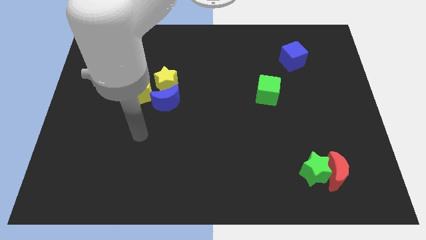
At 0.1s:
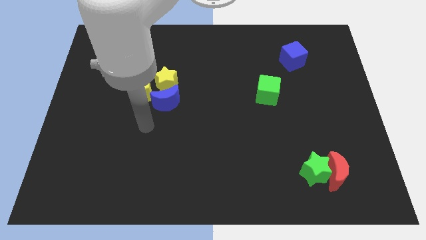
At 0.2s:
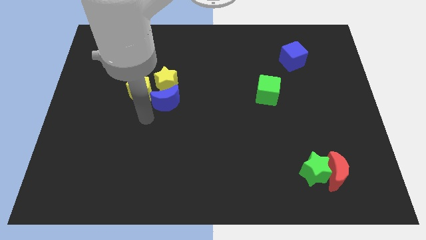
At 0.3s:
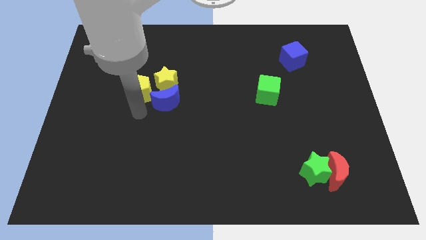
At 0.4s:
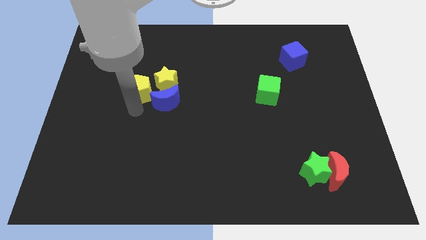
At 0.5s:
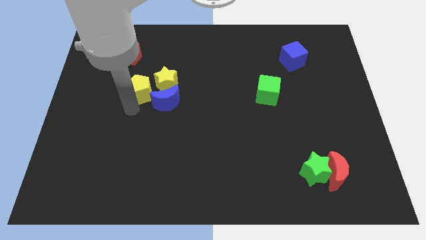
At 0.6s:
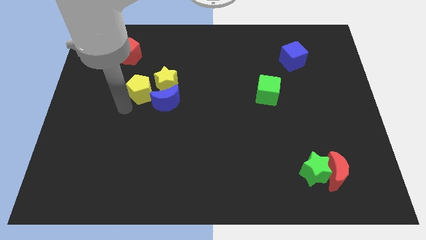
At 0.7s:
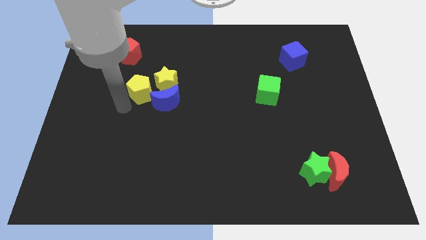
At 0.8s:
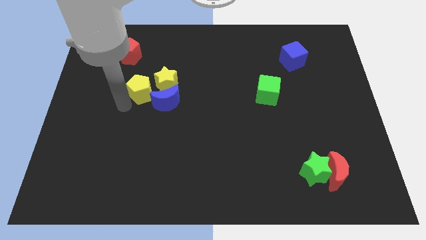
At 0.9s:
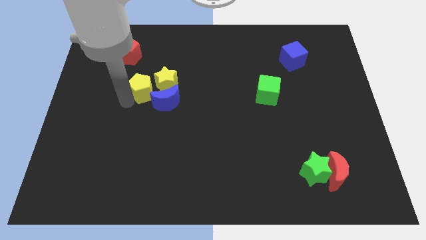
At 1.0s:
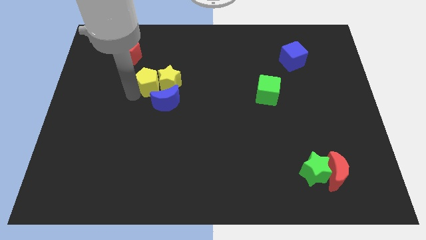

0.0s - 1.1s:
touch the bottom of yellow pentagon

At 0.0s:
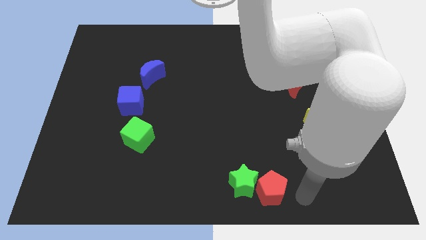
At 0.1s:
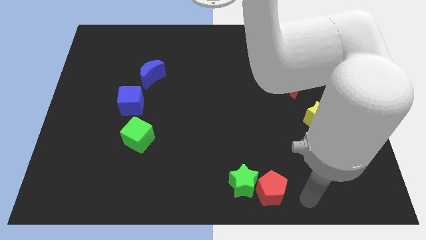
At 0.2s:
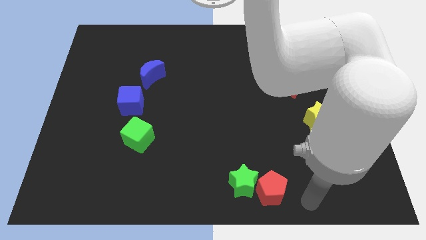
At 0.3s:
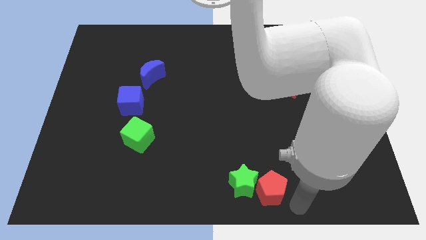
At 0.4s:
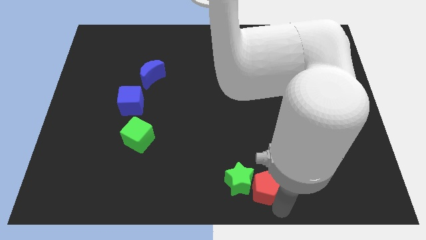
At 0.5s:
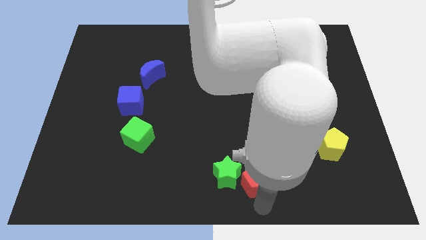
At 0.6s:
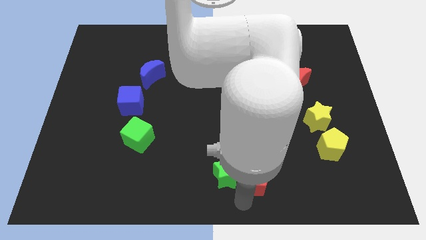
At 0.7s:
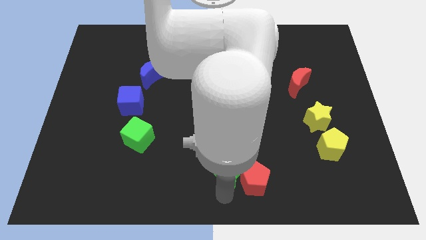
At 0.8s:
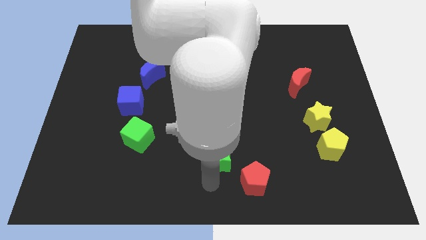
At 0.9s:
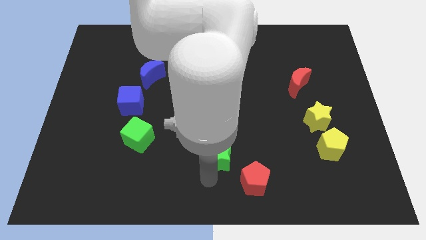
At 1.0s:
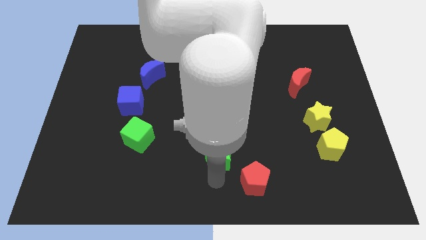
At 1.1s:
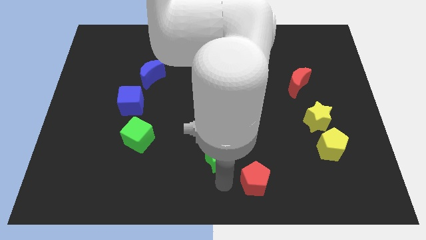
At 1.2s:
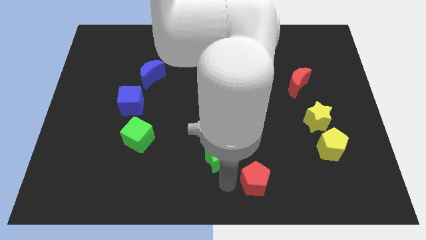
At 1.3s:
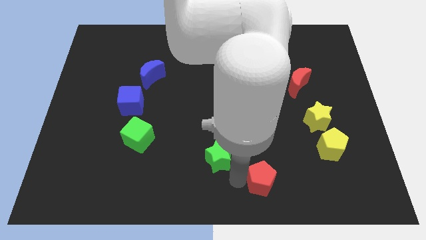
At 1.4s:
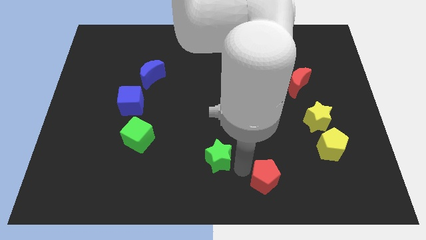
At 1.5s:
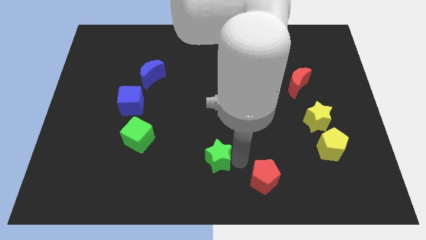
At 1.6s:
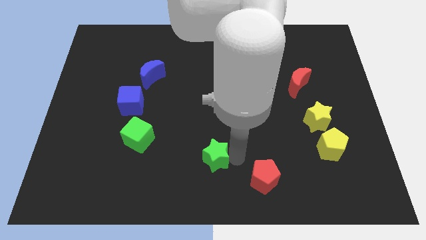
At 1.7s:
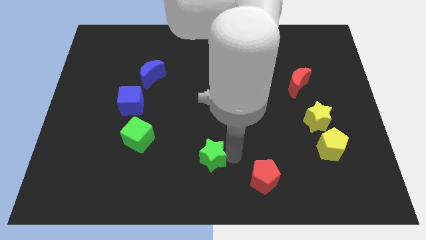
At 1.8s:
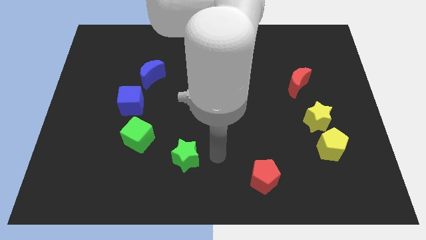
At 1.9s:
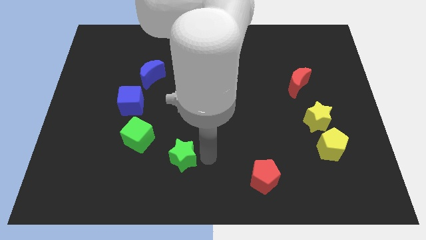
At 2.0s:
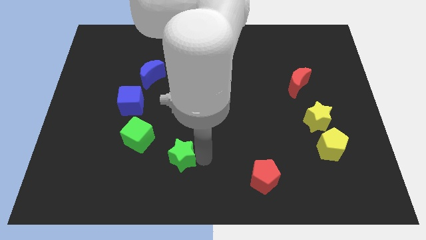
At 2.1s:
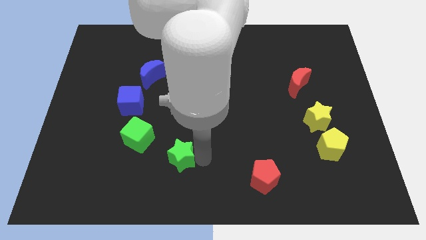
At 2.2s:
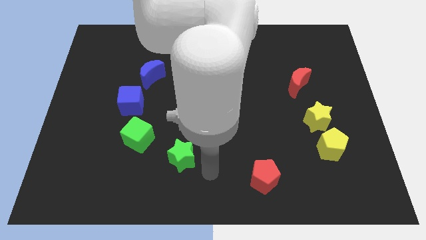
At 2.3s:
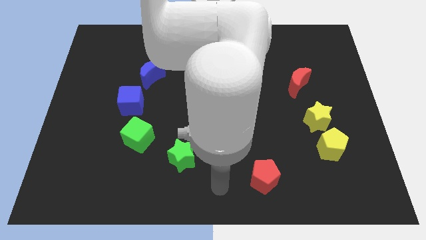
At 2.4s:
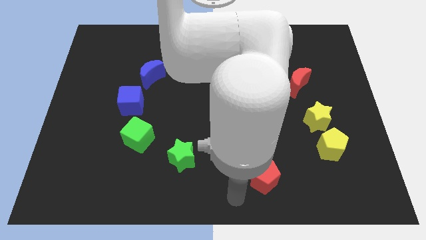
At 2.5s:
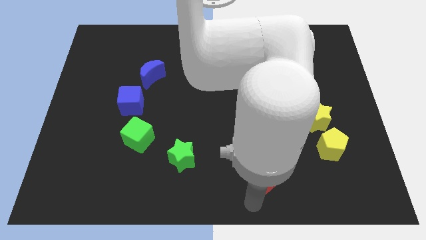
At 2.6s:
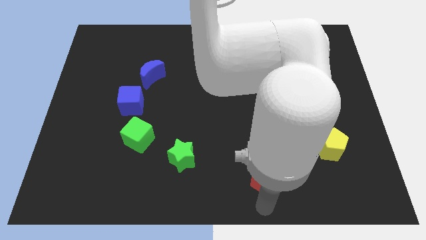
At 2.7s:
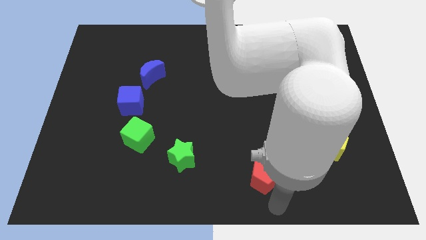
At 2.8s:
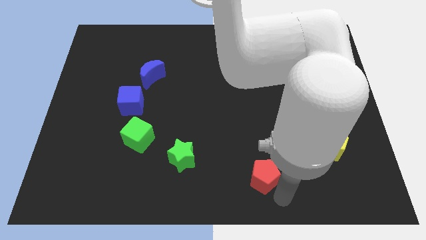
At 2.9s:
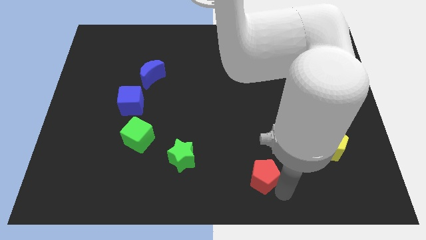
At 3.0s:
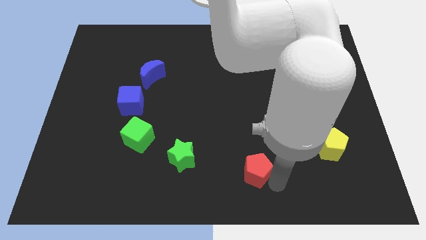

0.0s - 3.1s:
separate green star and red pentagon from each other

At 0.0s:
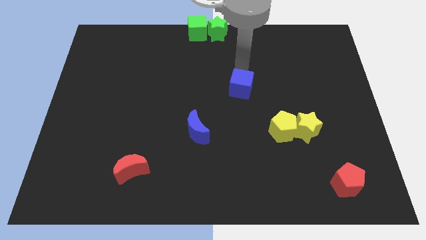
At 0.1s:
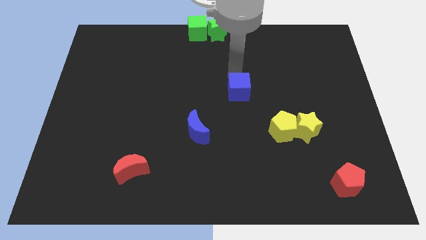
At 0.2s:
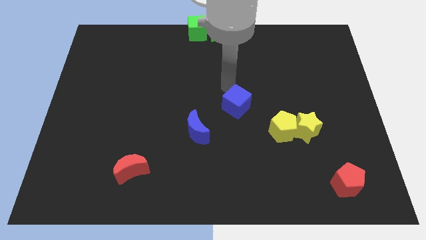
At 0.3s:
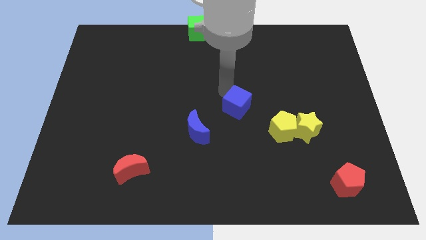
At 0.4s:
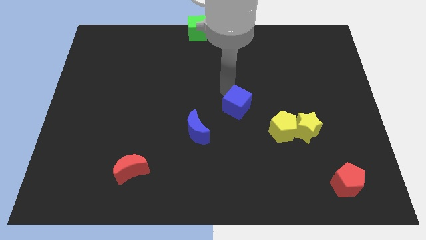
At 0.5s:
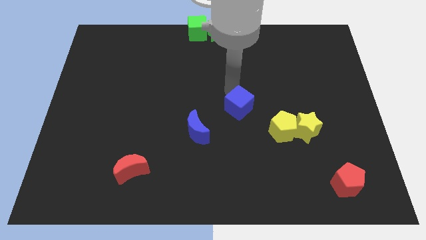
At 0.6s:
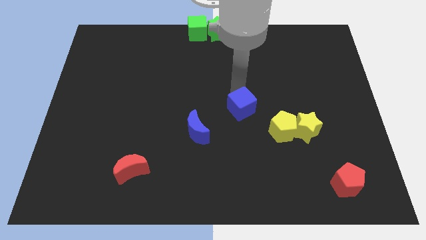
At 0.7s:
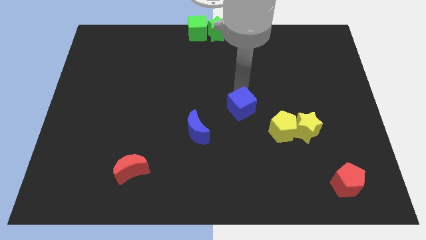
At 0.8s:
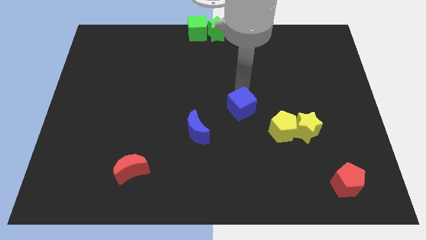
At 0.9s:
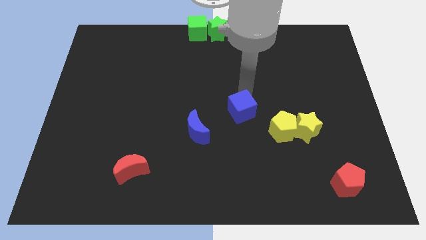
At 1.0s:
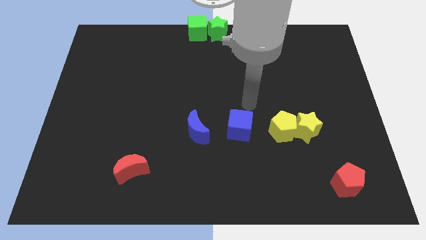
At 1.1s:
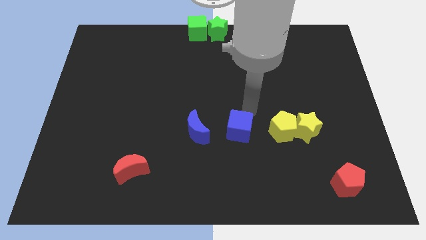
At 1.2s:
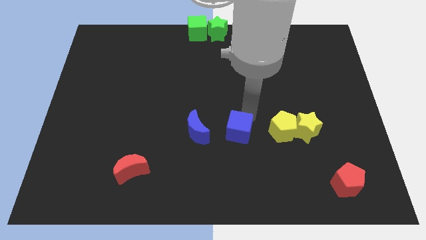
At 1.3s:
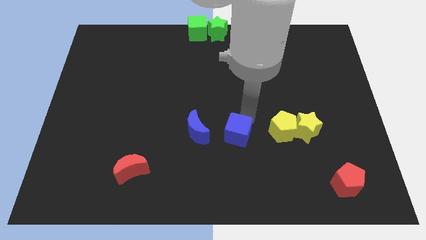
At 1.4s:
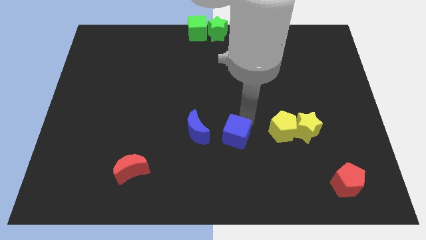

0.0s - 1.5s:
place the blue cube horizontally in between the yellow pentagon and blue crescent

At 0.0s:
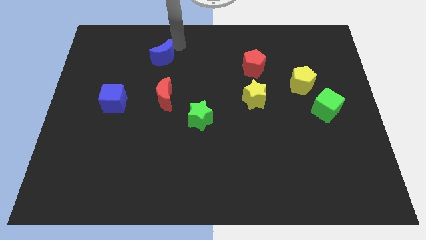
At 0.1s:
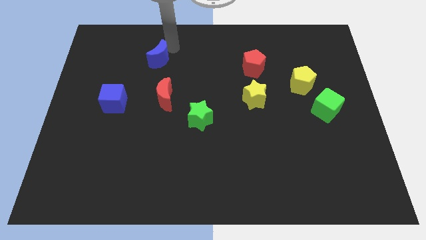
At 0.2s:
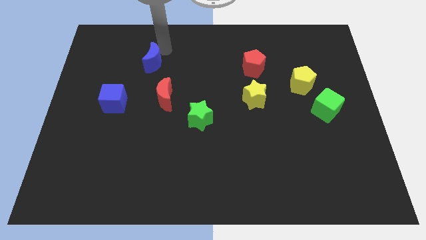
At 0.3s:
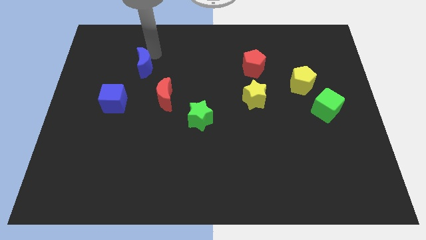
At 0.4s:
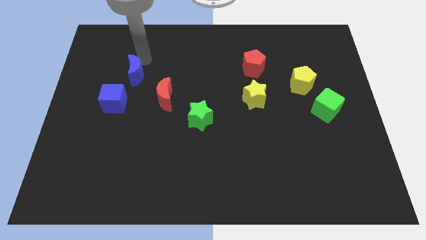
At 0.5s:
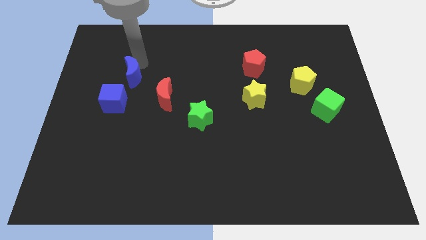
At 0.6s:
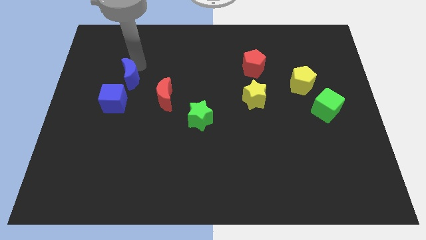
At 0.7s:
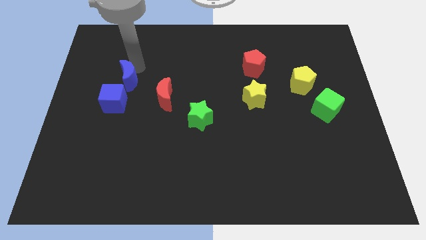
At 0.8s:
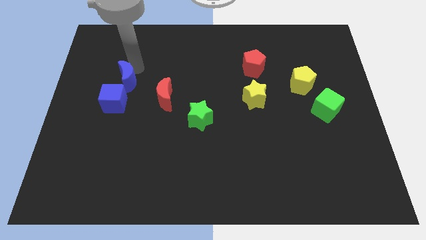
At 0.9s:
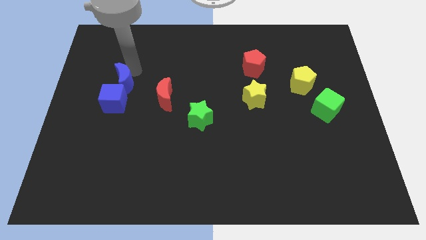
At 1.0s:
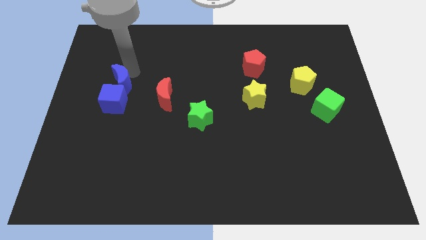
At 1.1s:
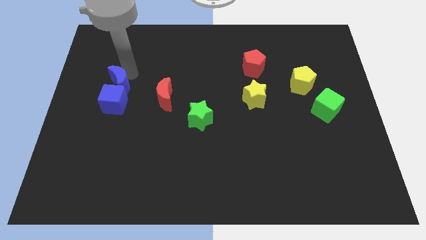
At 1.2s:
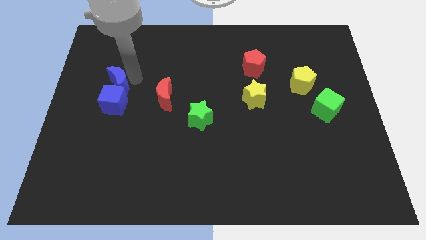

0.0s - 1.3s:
push blue crescent above blue cube

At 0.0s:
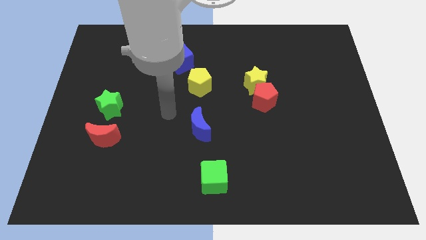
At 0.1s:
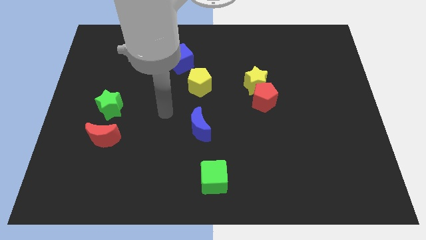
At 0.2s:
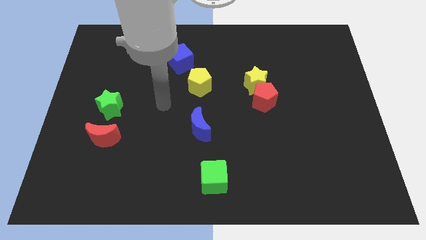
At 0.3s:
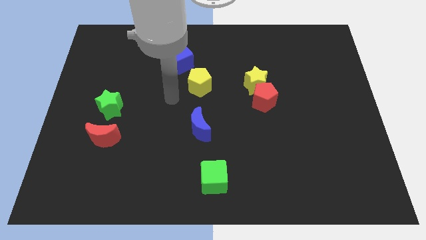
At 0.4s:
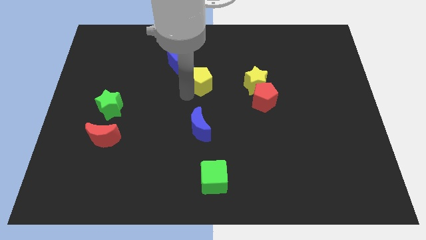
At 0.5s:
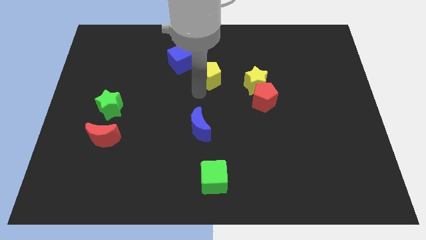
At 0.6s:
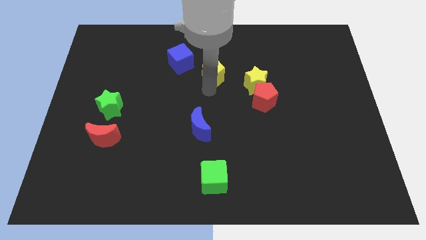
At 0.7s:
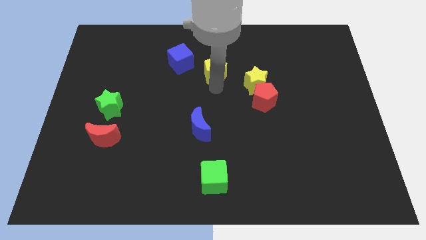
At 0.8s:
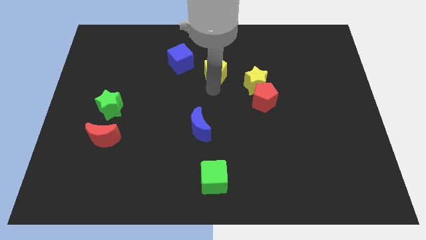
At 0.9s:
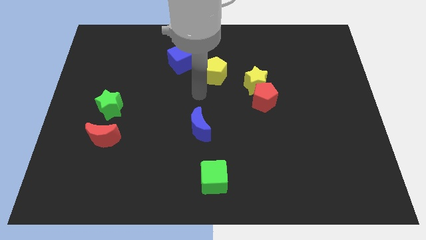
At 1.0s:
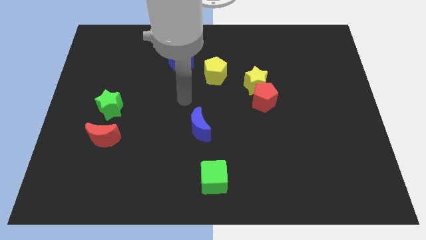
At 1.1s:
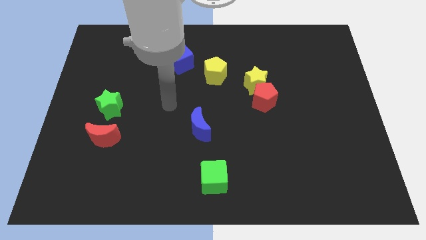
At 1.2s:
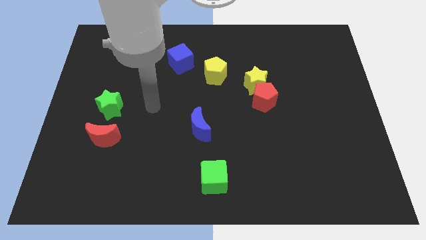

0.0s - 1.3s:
move the yellow pentagon diagonal to the blue cube

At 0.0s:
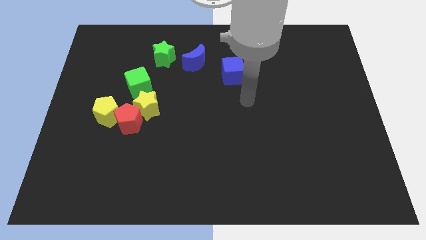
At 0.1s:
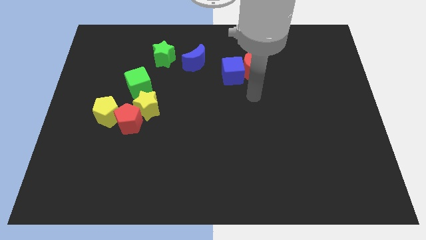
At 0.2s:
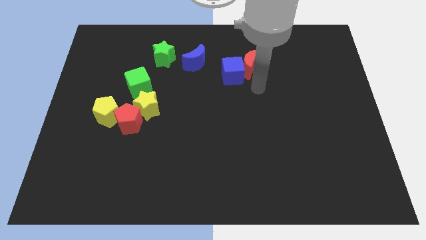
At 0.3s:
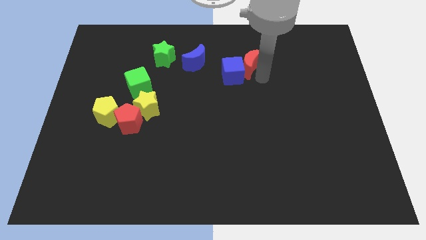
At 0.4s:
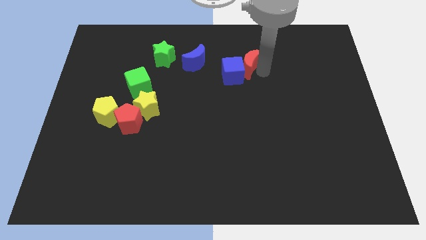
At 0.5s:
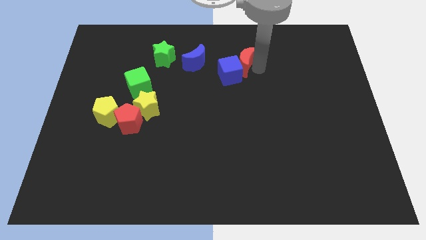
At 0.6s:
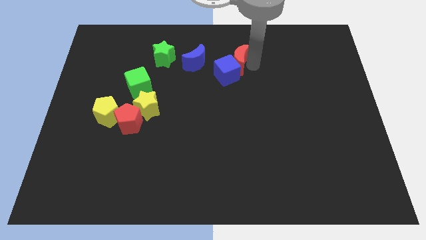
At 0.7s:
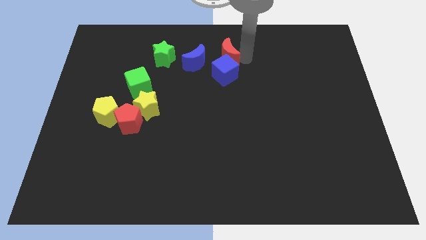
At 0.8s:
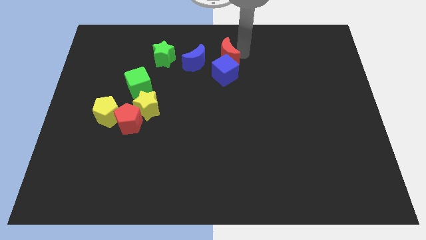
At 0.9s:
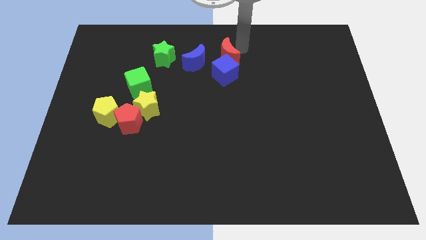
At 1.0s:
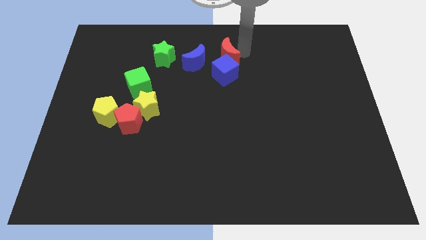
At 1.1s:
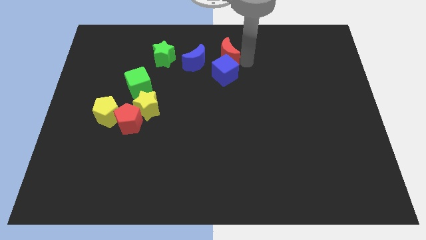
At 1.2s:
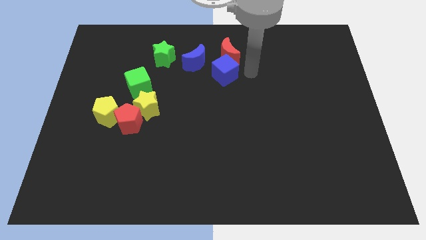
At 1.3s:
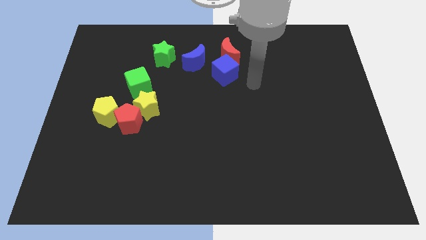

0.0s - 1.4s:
slide the red crescent and blue cube towards the blue moon
